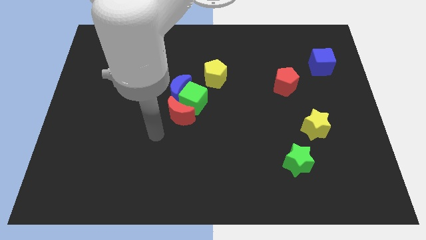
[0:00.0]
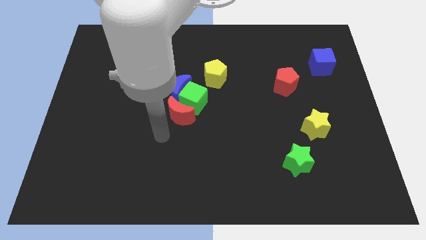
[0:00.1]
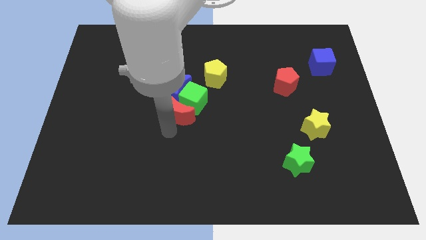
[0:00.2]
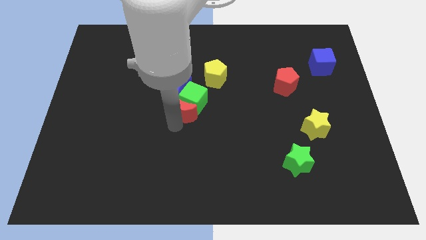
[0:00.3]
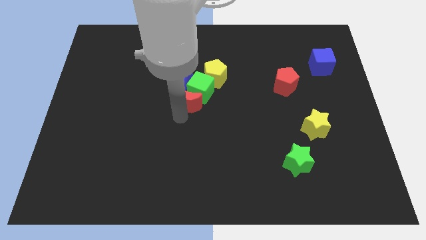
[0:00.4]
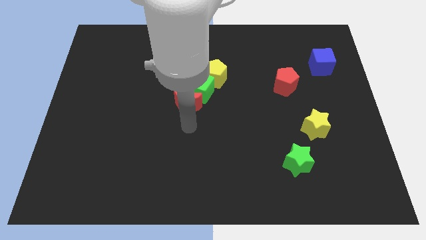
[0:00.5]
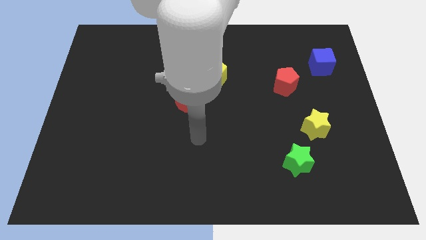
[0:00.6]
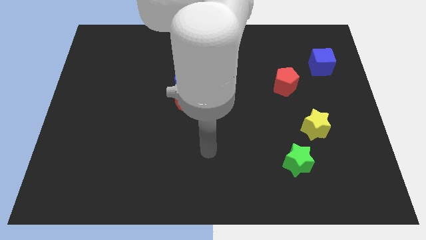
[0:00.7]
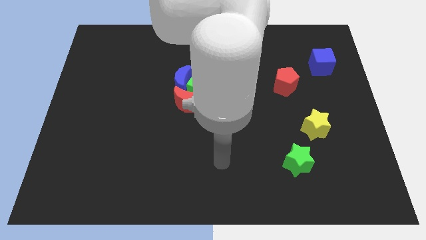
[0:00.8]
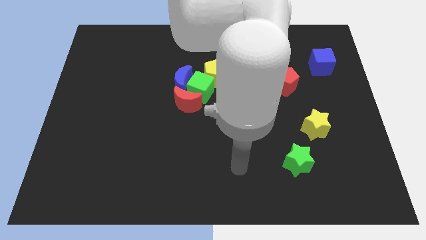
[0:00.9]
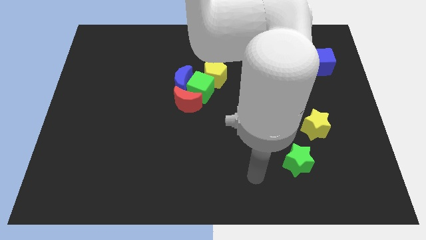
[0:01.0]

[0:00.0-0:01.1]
push the red crescent to the top

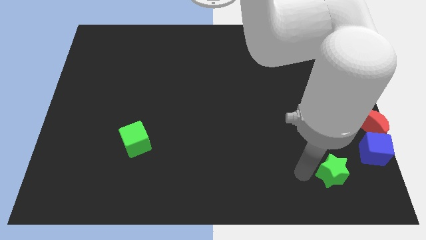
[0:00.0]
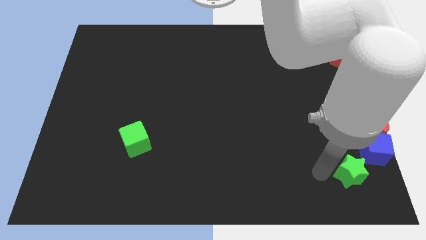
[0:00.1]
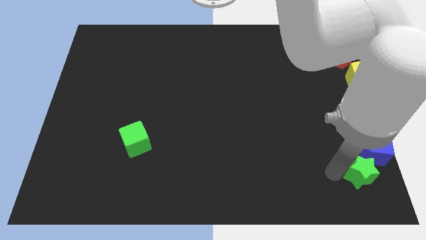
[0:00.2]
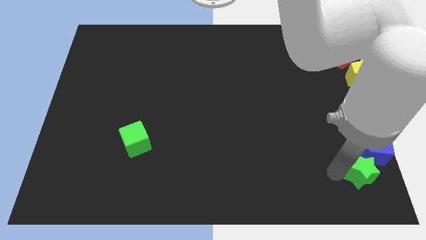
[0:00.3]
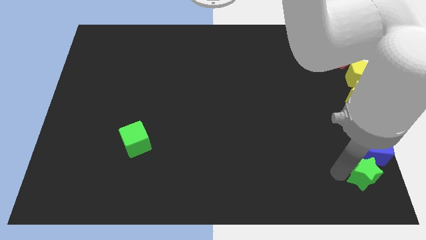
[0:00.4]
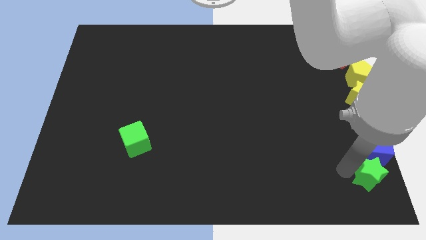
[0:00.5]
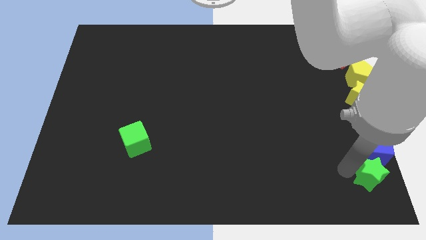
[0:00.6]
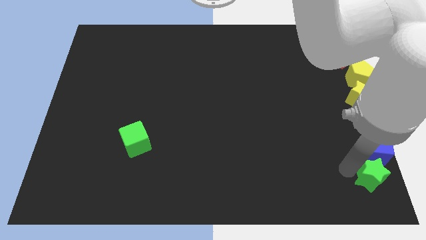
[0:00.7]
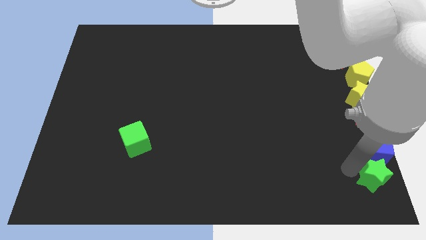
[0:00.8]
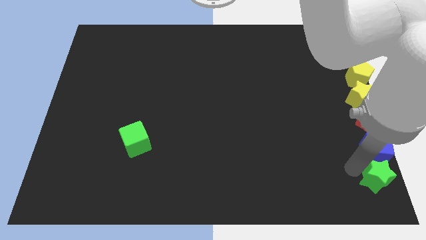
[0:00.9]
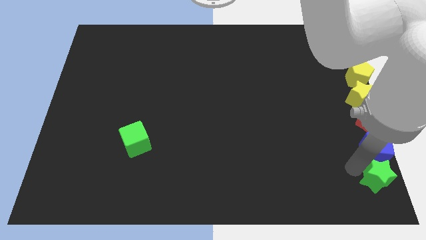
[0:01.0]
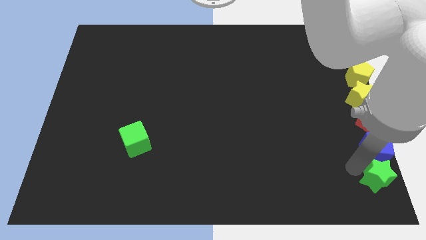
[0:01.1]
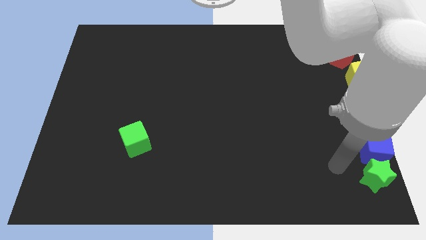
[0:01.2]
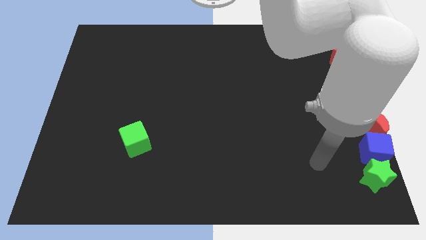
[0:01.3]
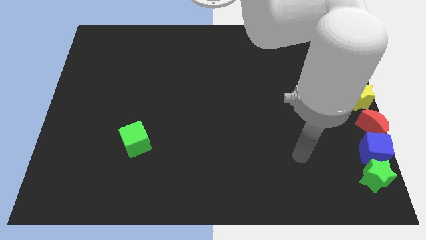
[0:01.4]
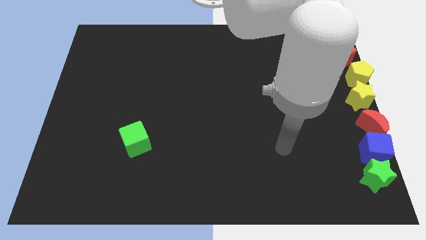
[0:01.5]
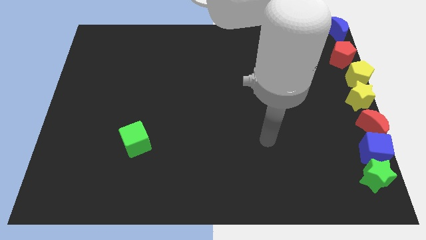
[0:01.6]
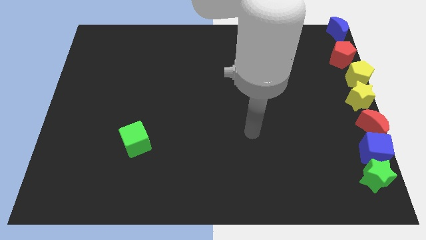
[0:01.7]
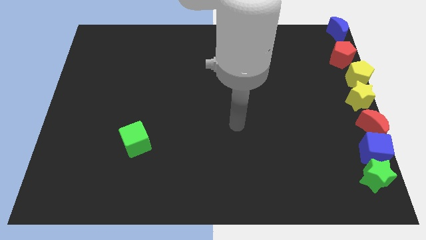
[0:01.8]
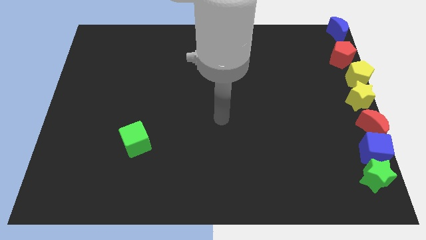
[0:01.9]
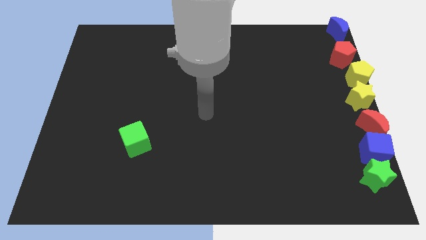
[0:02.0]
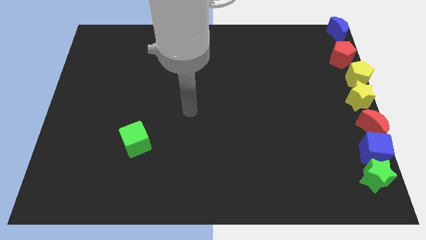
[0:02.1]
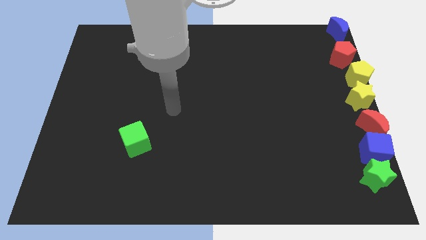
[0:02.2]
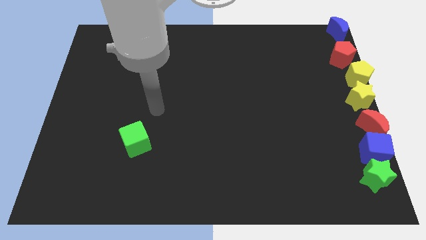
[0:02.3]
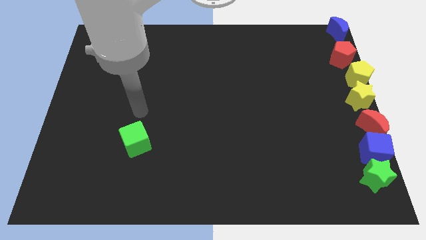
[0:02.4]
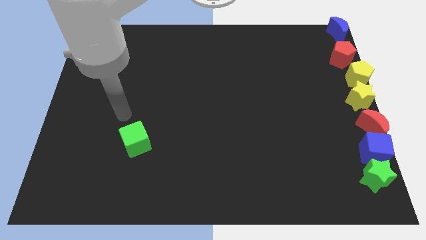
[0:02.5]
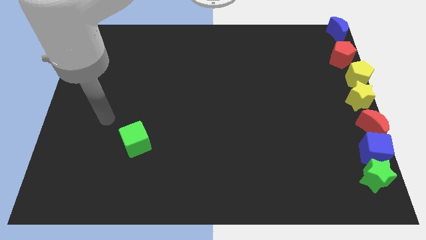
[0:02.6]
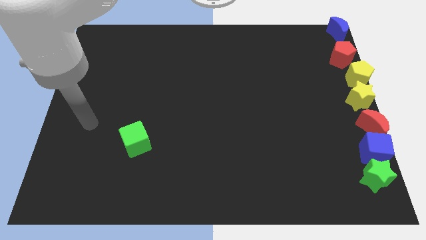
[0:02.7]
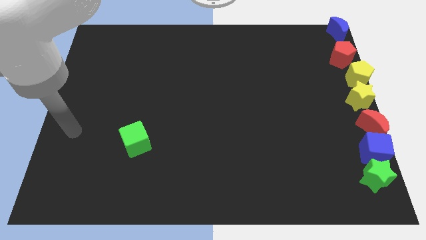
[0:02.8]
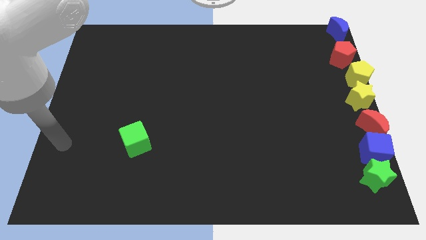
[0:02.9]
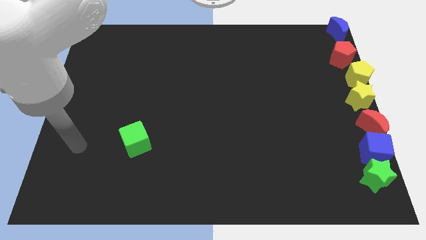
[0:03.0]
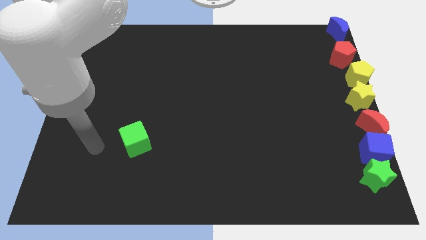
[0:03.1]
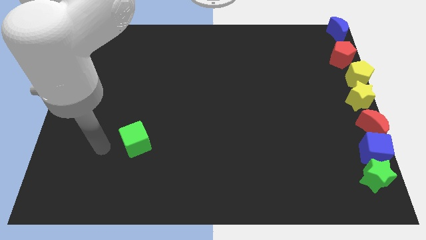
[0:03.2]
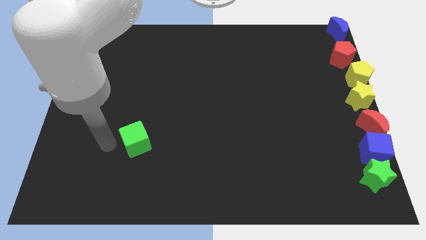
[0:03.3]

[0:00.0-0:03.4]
put the green star vertically below the blue cube

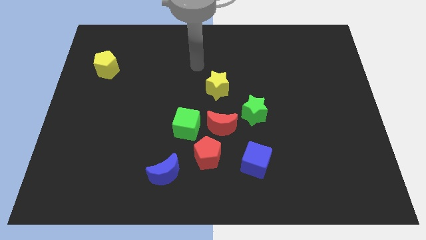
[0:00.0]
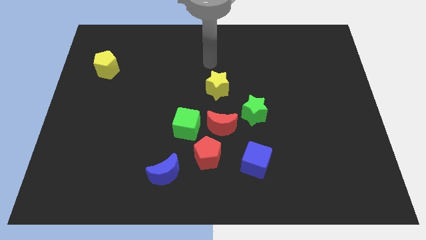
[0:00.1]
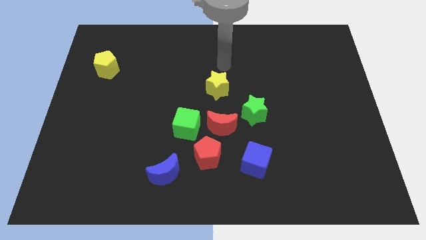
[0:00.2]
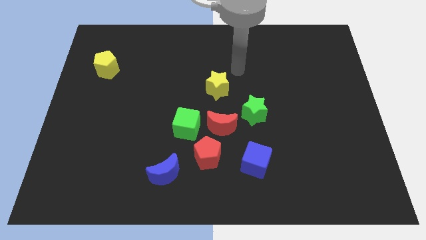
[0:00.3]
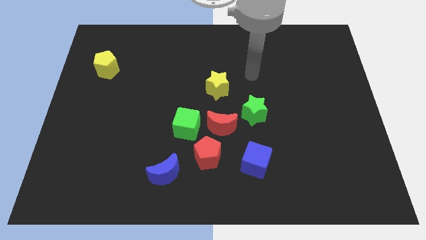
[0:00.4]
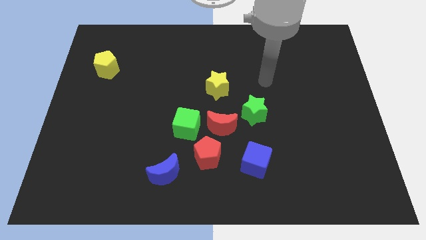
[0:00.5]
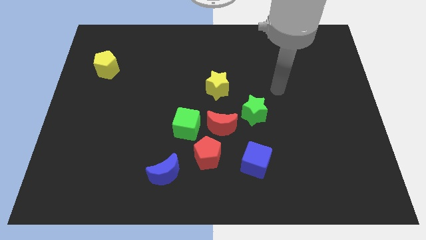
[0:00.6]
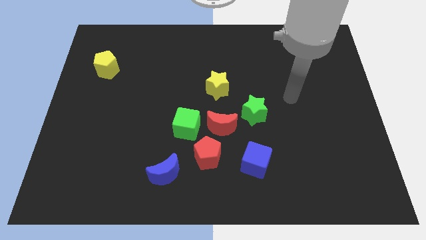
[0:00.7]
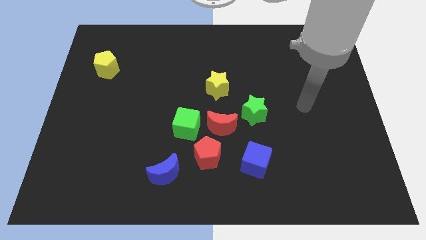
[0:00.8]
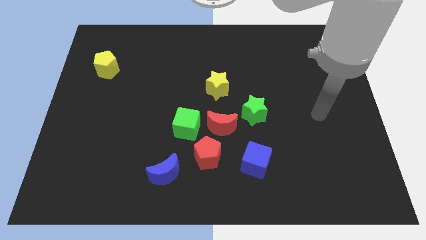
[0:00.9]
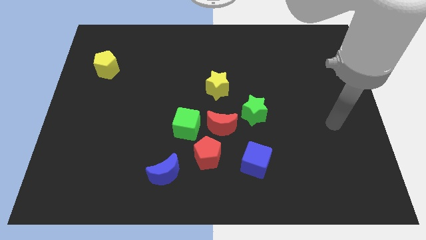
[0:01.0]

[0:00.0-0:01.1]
slide your arm towards center right

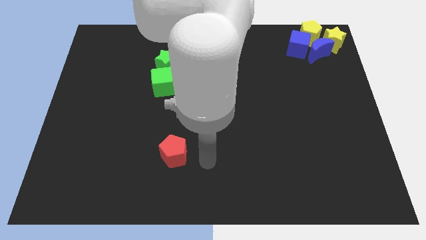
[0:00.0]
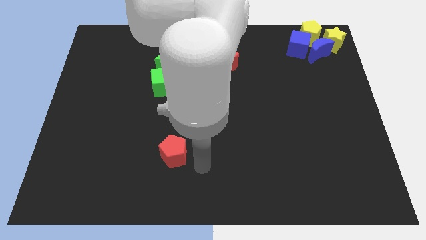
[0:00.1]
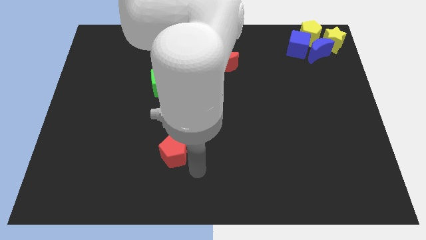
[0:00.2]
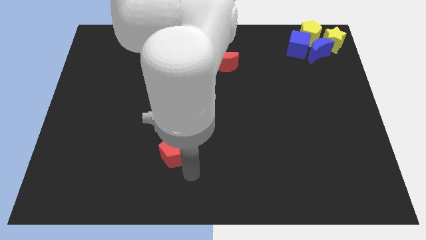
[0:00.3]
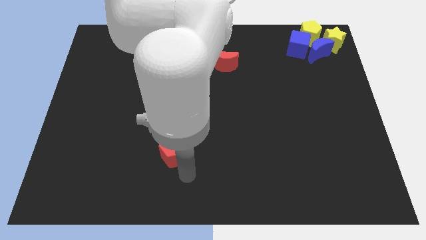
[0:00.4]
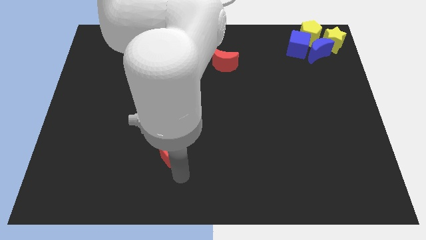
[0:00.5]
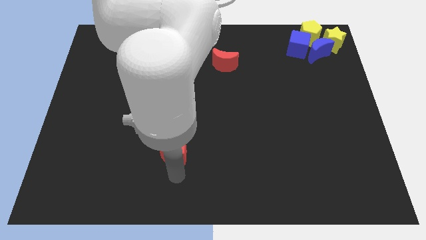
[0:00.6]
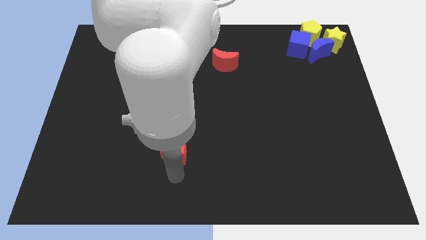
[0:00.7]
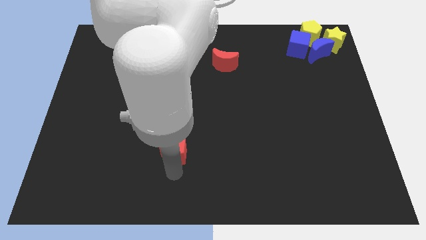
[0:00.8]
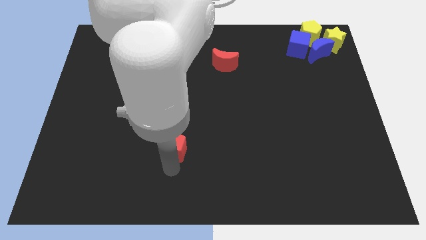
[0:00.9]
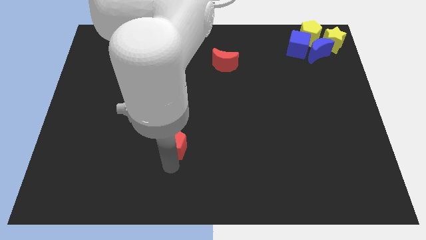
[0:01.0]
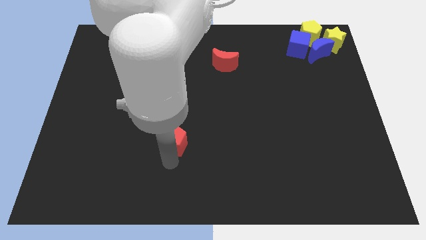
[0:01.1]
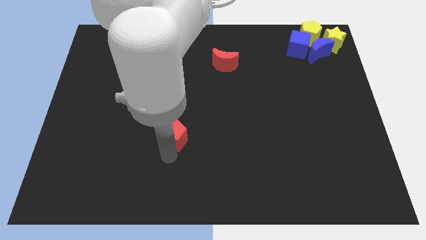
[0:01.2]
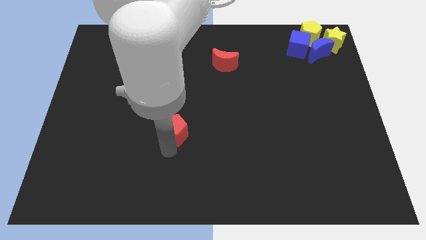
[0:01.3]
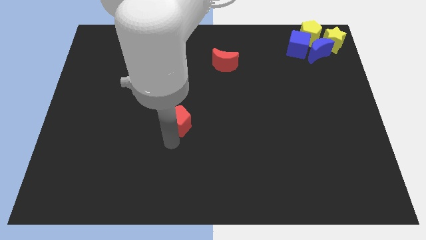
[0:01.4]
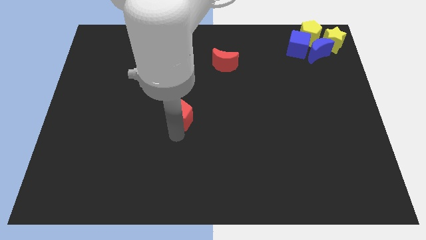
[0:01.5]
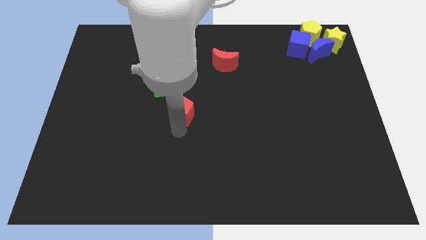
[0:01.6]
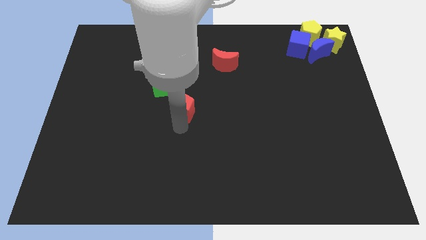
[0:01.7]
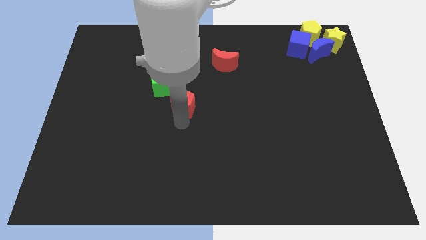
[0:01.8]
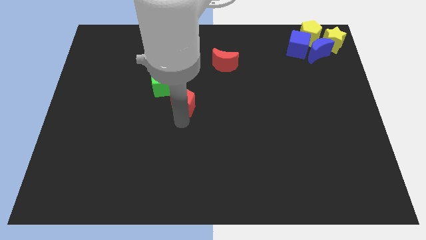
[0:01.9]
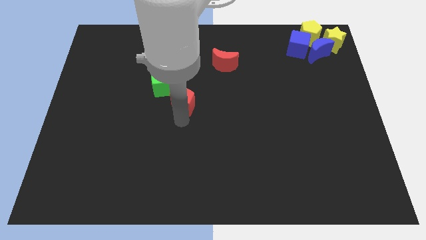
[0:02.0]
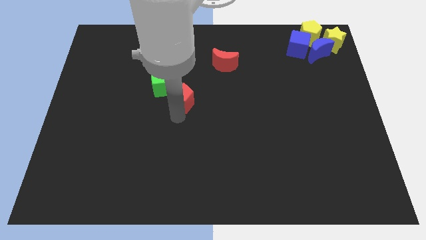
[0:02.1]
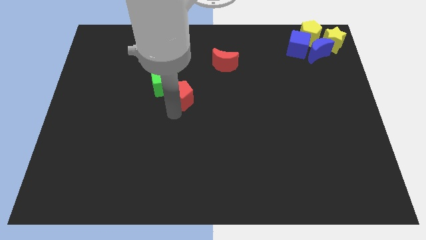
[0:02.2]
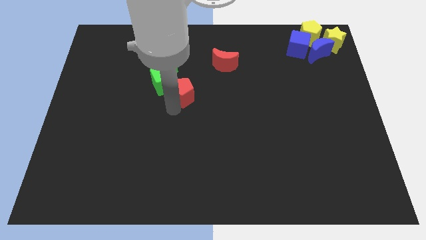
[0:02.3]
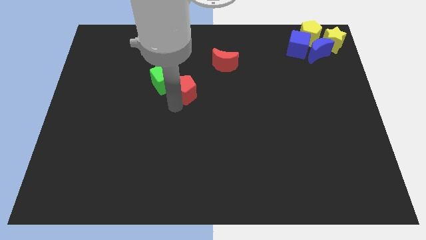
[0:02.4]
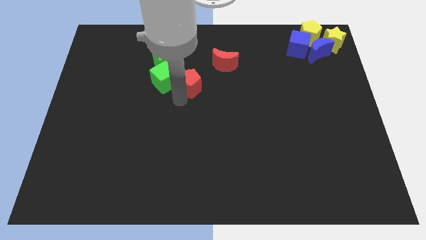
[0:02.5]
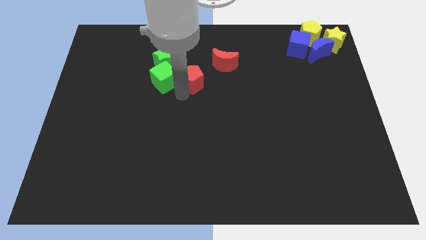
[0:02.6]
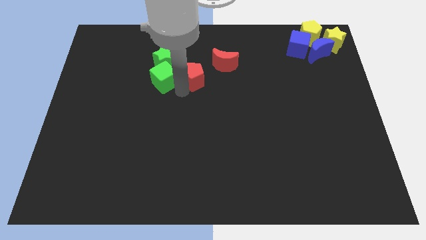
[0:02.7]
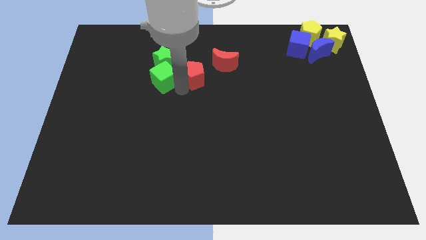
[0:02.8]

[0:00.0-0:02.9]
move the red pentagon right to the green cube

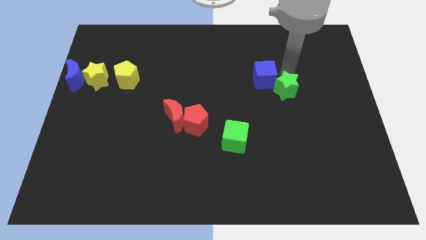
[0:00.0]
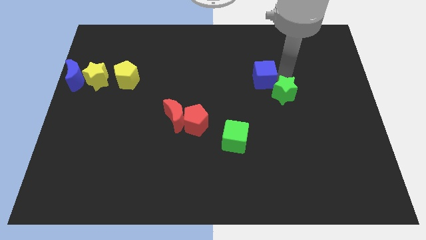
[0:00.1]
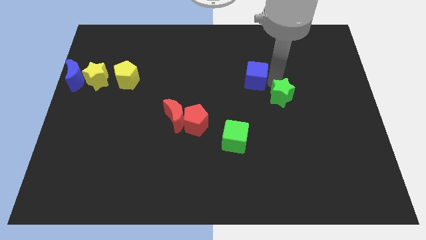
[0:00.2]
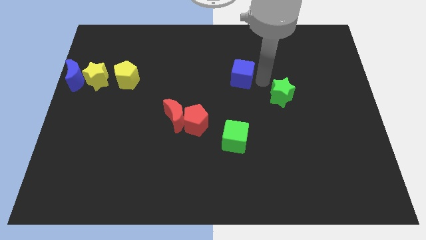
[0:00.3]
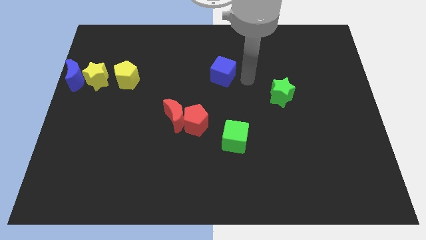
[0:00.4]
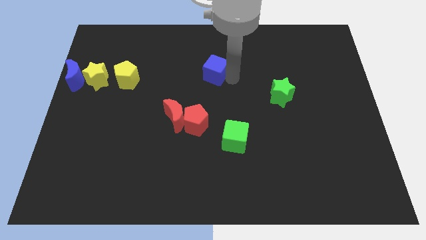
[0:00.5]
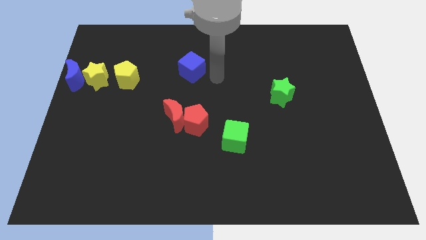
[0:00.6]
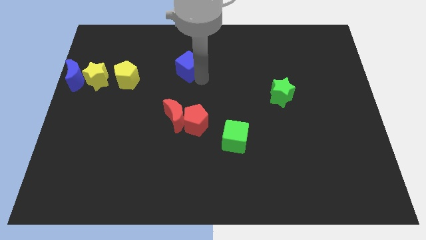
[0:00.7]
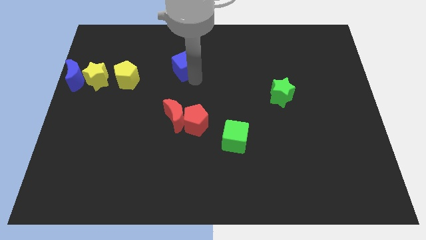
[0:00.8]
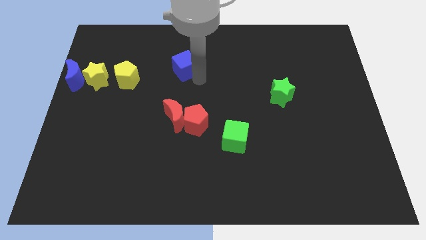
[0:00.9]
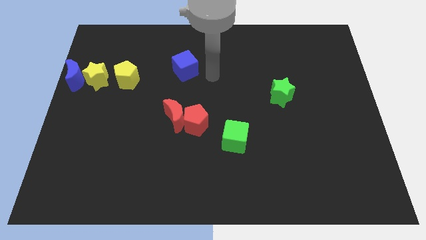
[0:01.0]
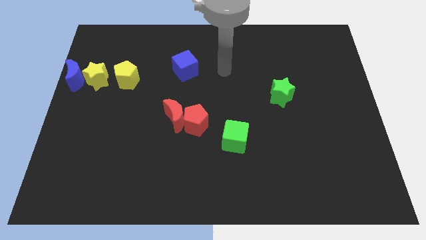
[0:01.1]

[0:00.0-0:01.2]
separate the blue cube from the green star
